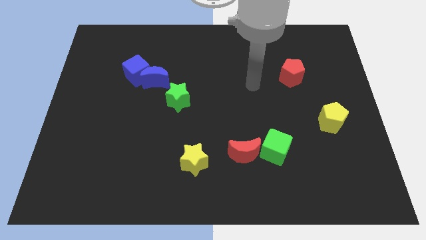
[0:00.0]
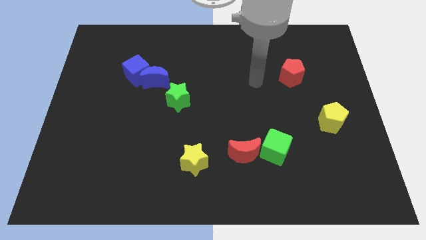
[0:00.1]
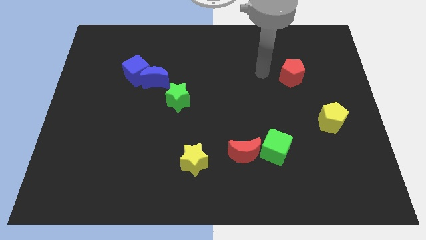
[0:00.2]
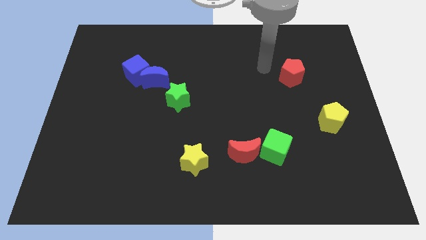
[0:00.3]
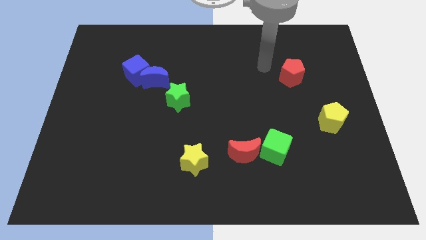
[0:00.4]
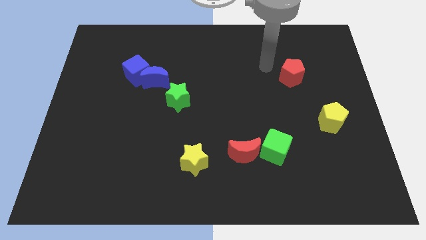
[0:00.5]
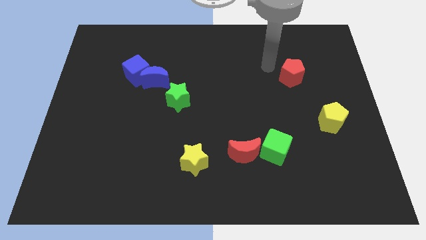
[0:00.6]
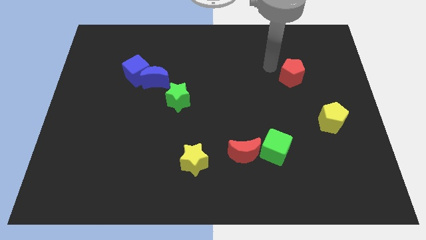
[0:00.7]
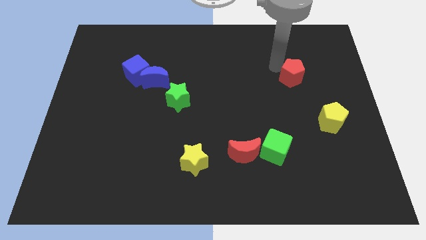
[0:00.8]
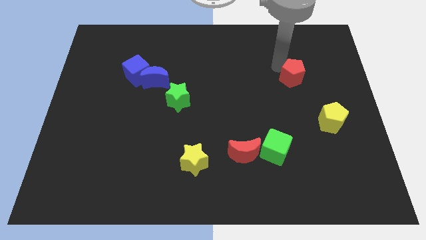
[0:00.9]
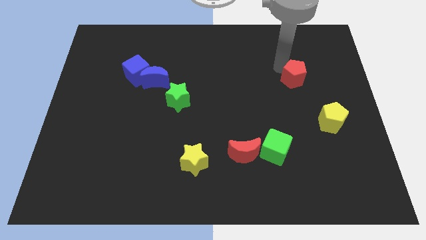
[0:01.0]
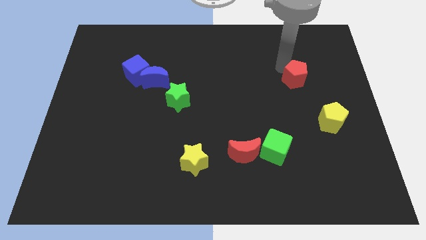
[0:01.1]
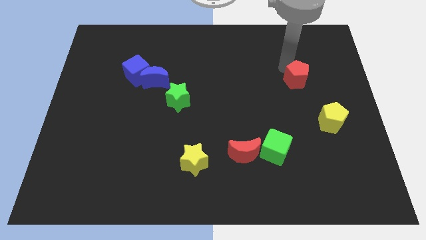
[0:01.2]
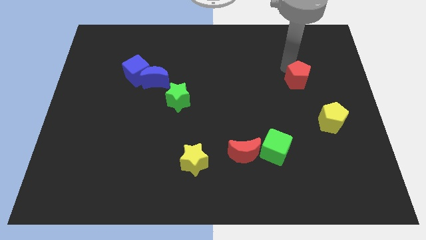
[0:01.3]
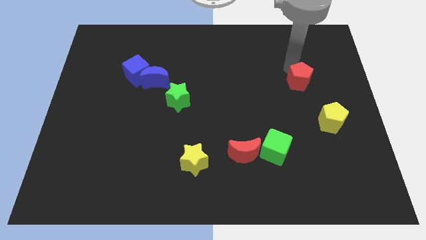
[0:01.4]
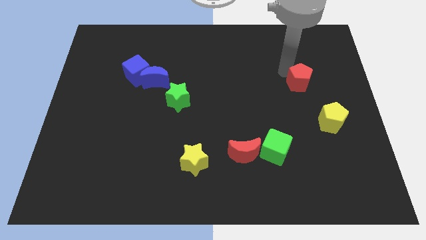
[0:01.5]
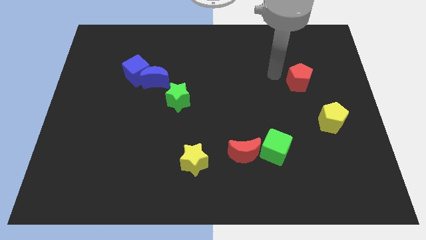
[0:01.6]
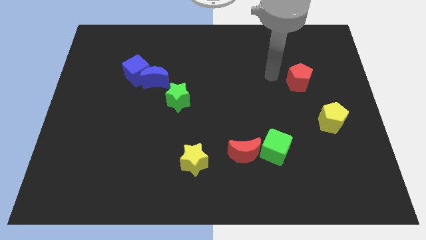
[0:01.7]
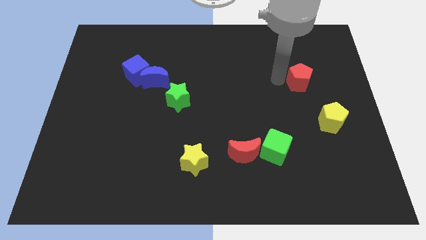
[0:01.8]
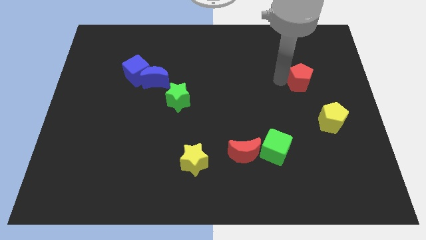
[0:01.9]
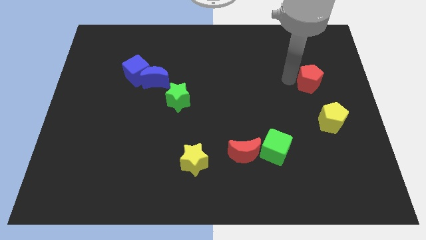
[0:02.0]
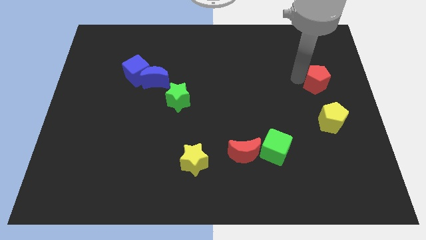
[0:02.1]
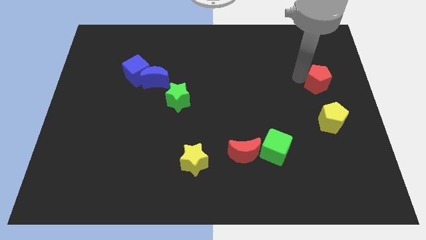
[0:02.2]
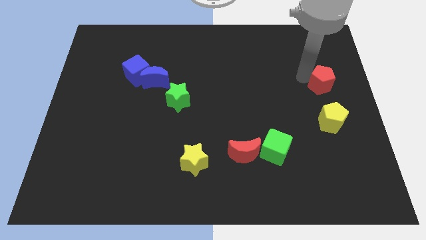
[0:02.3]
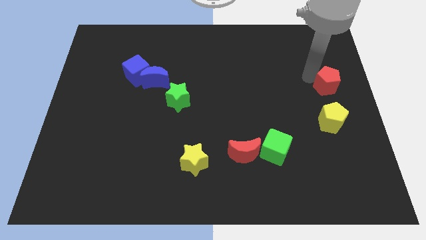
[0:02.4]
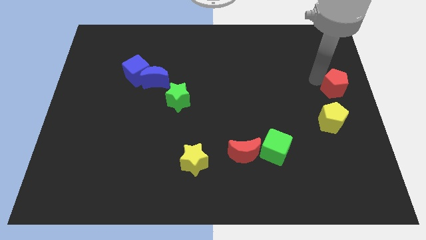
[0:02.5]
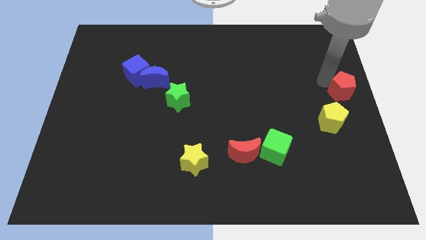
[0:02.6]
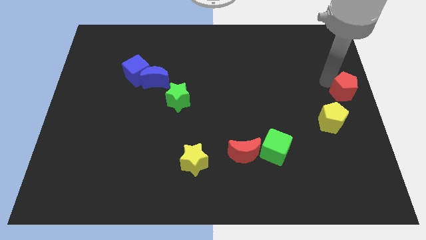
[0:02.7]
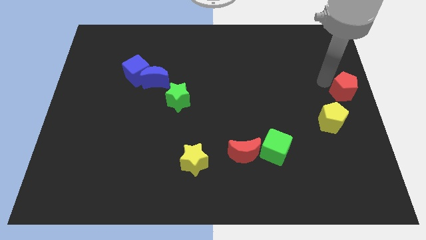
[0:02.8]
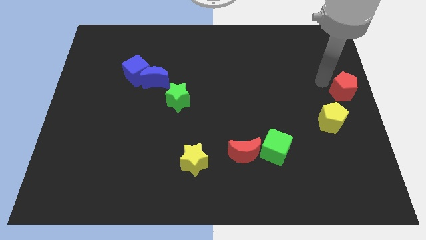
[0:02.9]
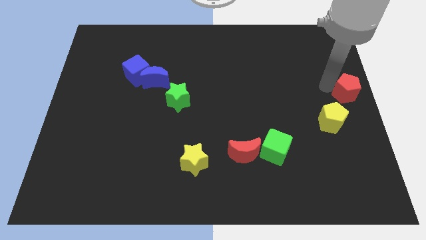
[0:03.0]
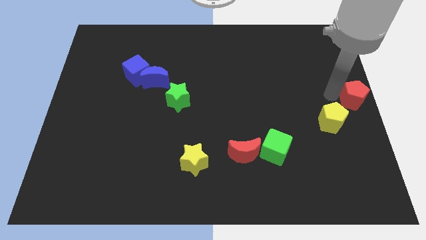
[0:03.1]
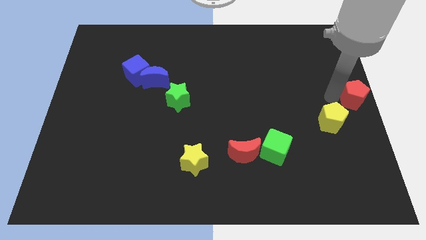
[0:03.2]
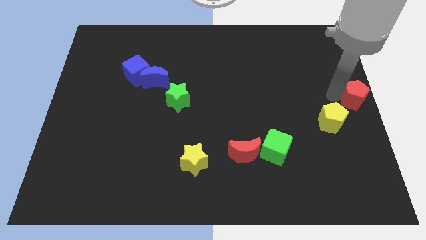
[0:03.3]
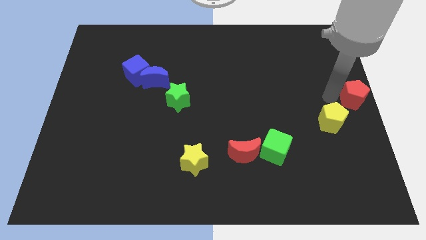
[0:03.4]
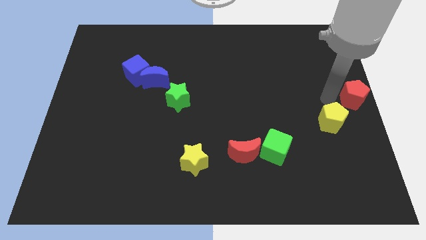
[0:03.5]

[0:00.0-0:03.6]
move the red pentagon to the center right of the board

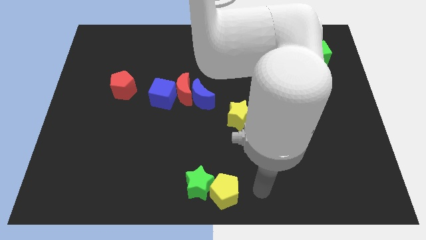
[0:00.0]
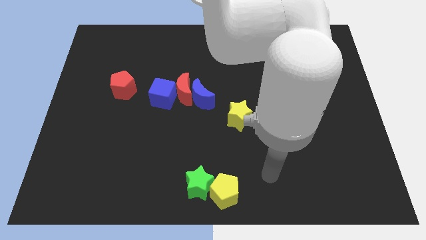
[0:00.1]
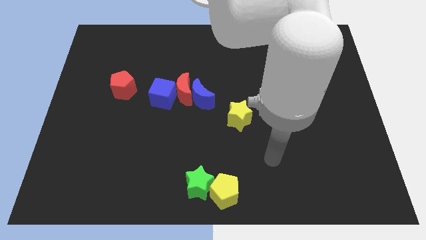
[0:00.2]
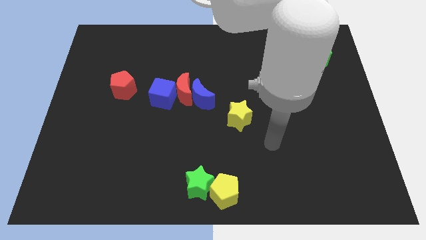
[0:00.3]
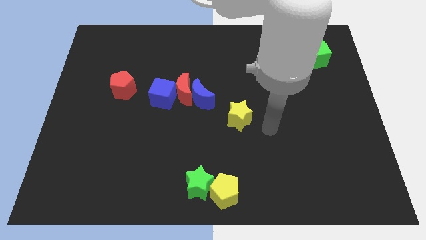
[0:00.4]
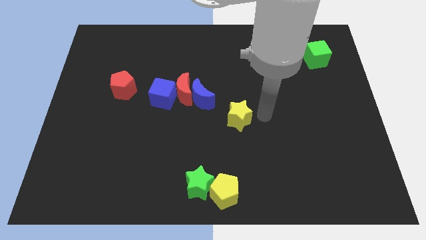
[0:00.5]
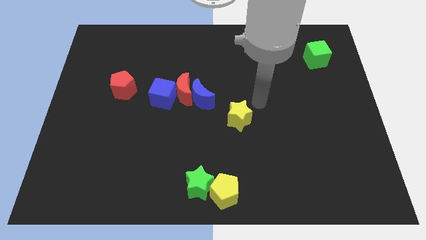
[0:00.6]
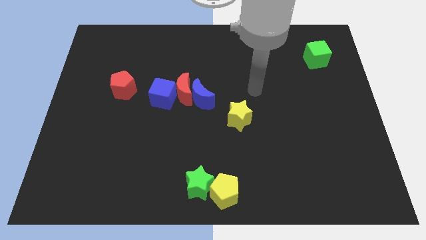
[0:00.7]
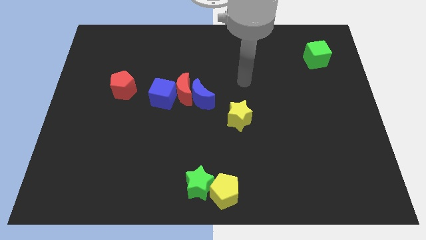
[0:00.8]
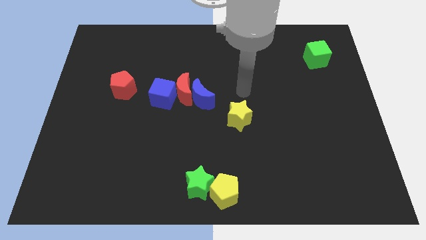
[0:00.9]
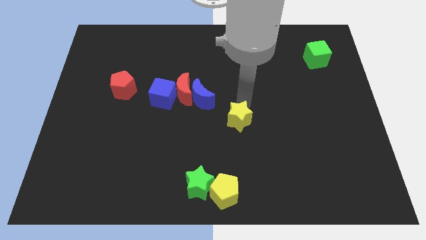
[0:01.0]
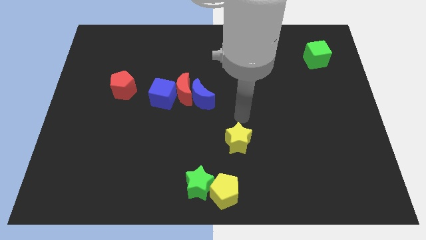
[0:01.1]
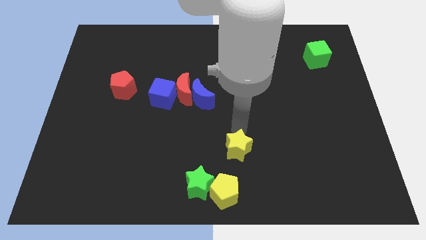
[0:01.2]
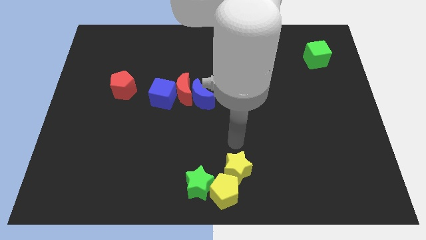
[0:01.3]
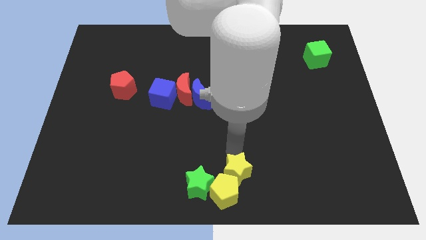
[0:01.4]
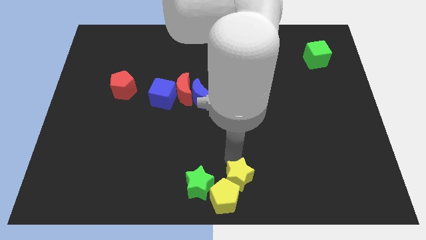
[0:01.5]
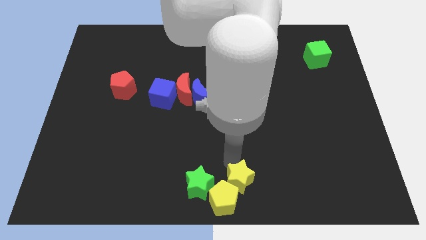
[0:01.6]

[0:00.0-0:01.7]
place yellow star above the yellow pentagon

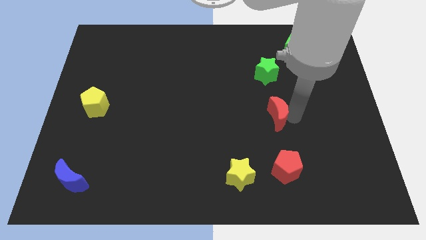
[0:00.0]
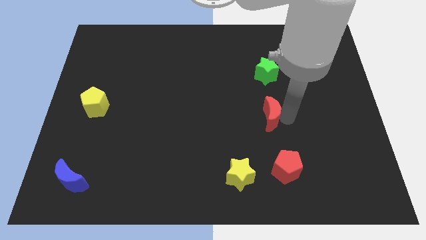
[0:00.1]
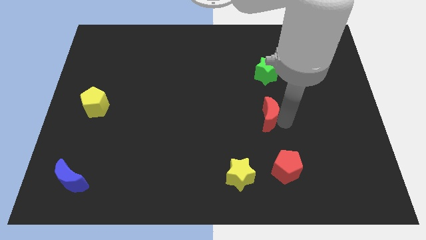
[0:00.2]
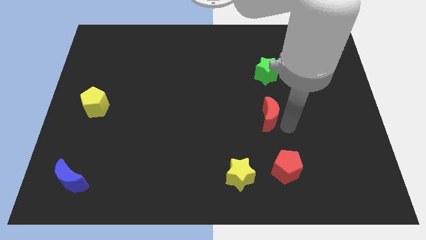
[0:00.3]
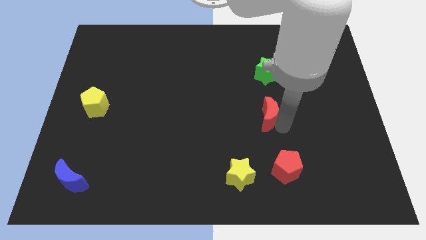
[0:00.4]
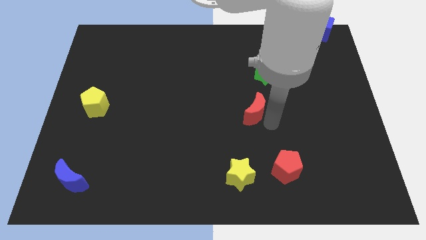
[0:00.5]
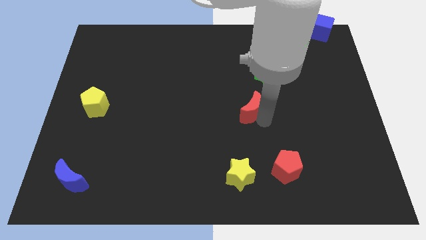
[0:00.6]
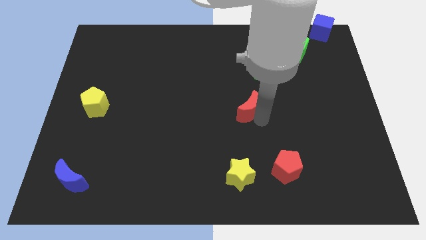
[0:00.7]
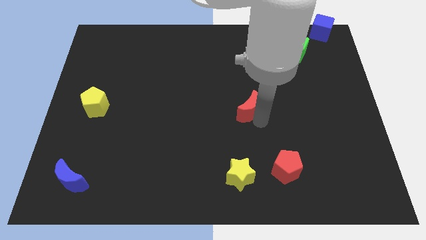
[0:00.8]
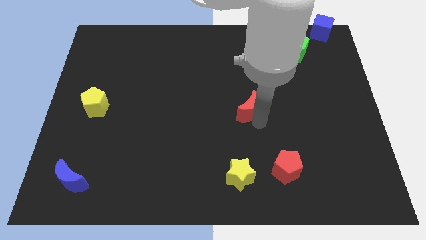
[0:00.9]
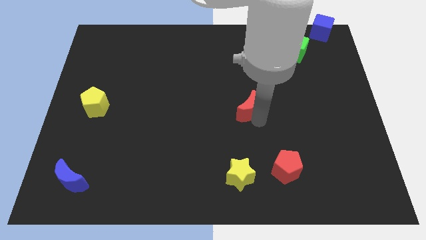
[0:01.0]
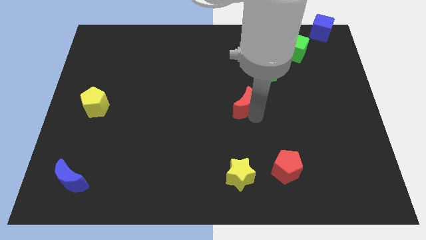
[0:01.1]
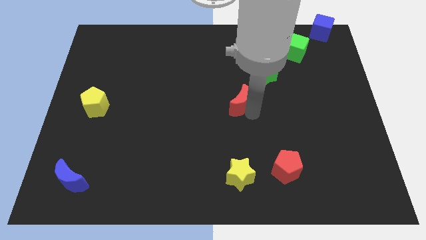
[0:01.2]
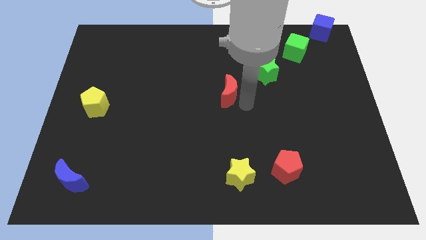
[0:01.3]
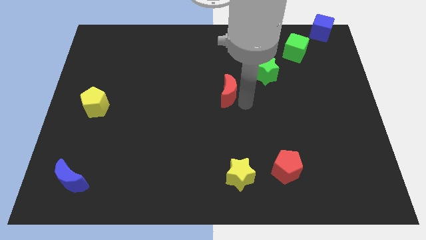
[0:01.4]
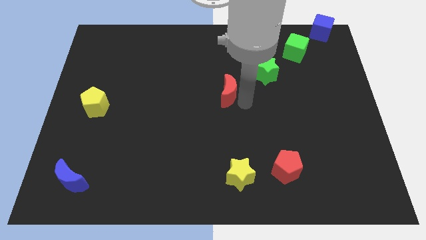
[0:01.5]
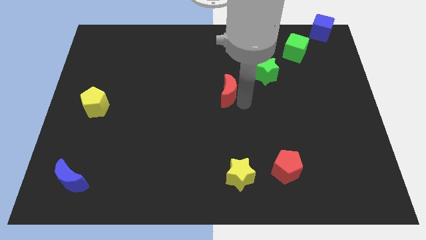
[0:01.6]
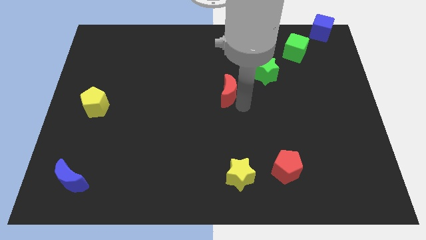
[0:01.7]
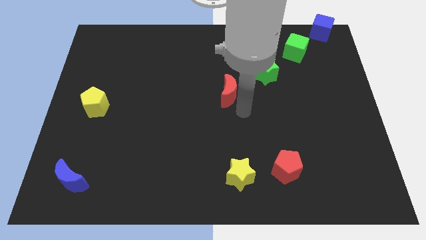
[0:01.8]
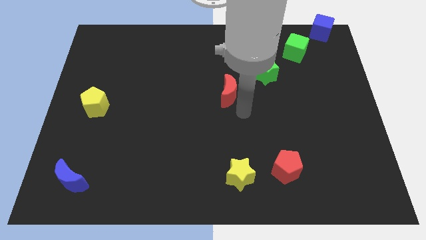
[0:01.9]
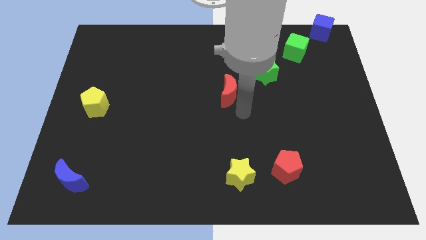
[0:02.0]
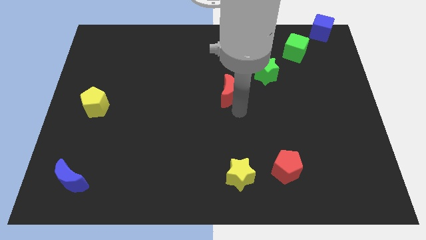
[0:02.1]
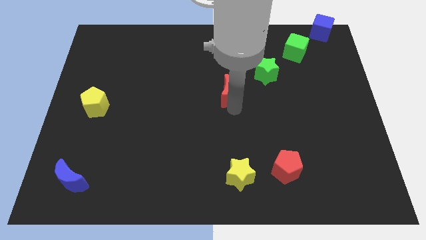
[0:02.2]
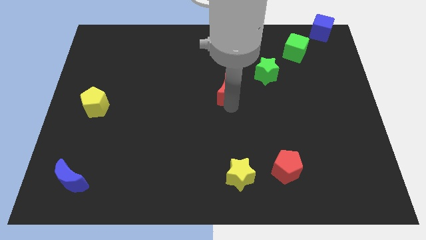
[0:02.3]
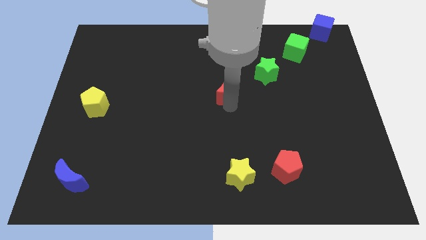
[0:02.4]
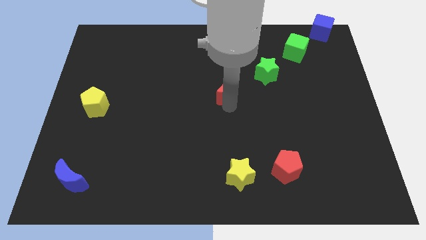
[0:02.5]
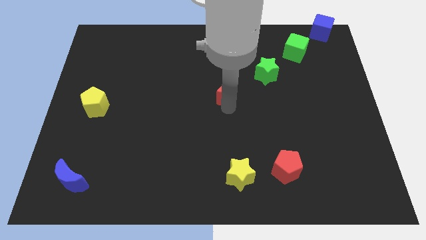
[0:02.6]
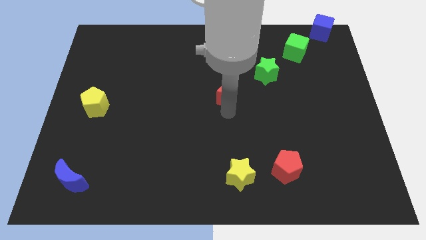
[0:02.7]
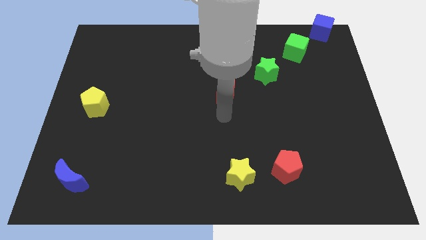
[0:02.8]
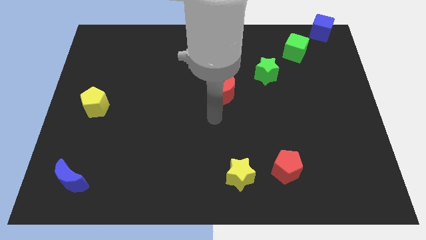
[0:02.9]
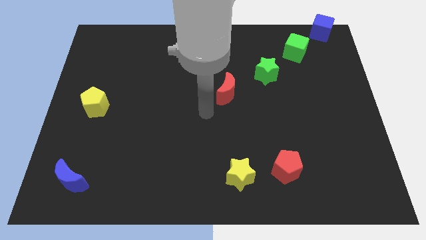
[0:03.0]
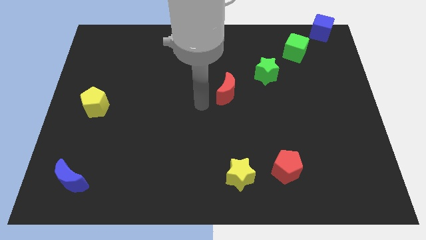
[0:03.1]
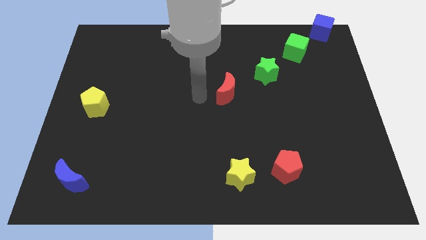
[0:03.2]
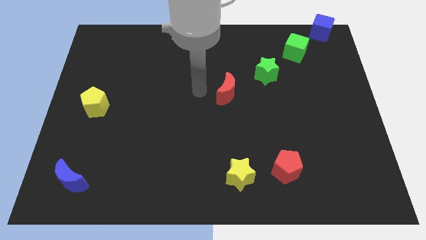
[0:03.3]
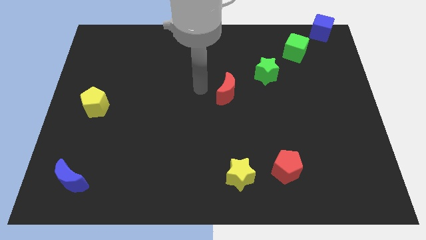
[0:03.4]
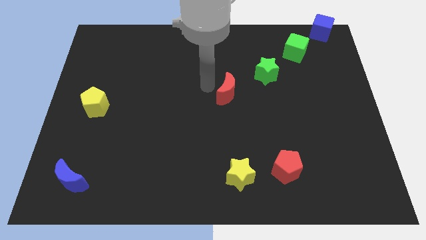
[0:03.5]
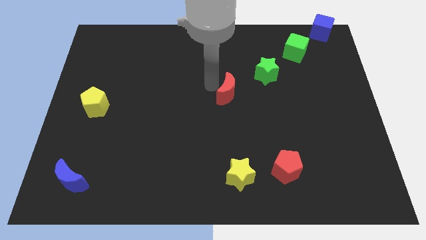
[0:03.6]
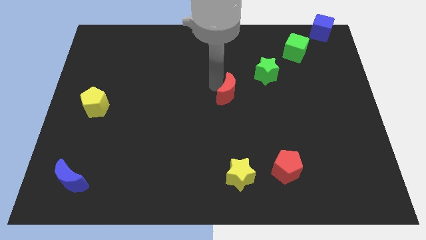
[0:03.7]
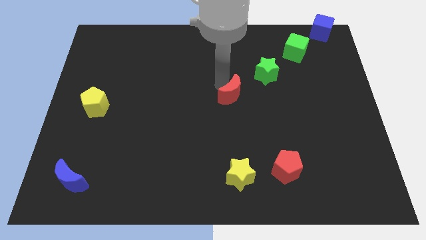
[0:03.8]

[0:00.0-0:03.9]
place the red crescent at center of the board
